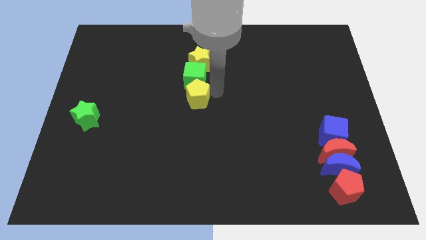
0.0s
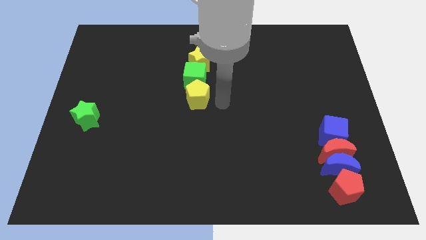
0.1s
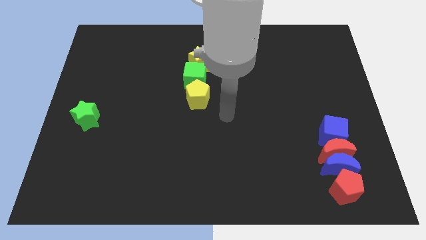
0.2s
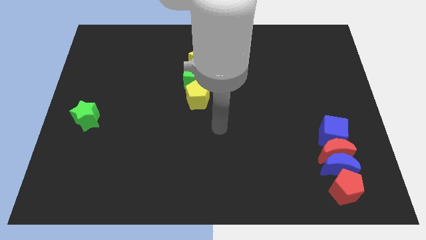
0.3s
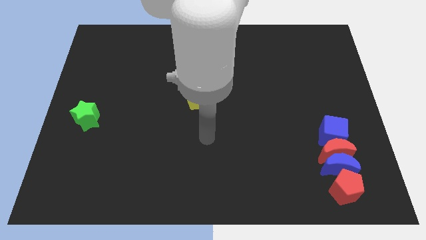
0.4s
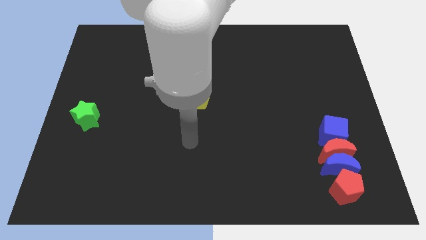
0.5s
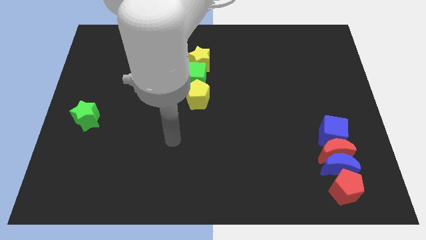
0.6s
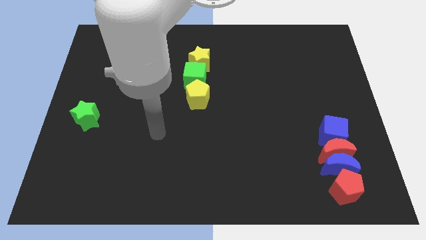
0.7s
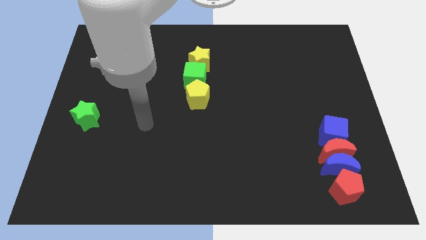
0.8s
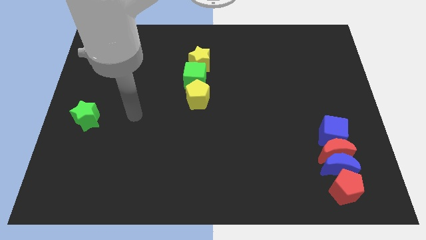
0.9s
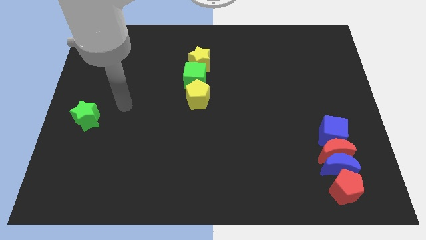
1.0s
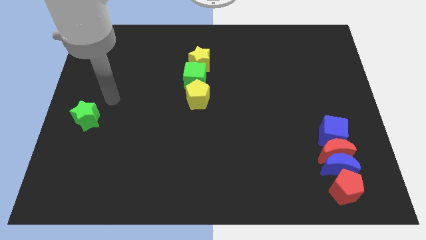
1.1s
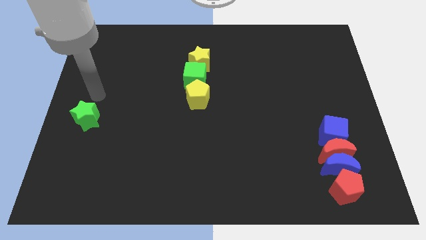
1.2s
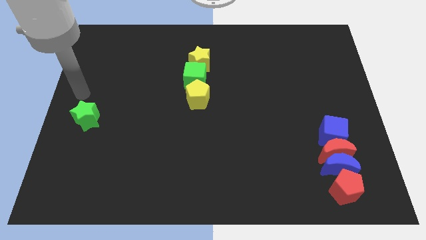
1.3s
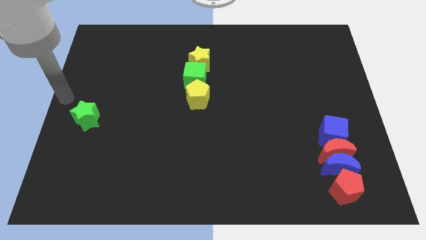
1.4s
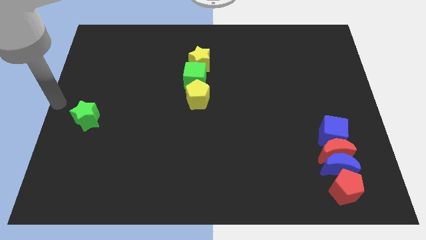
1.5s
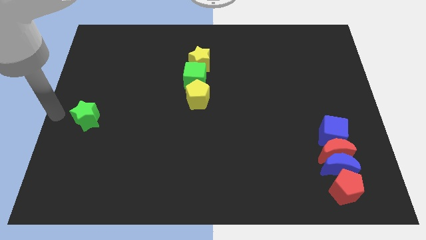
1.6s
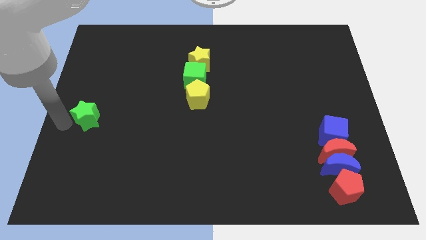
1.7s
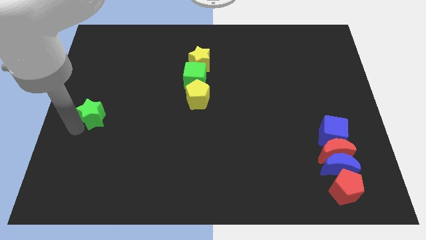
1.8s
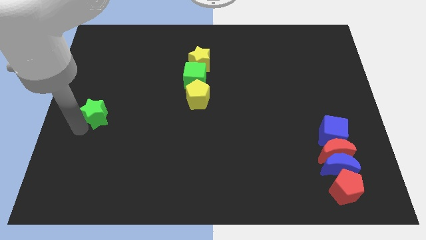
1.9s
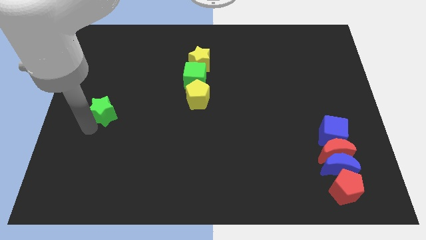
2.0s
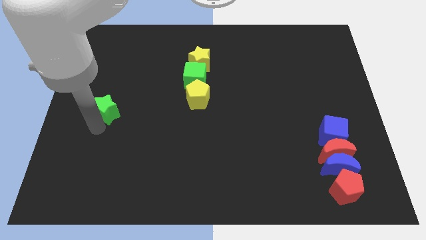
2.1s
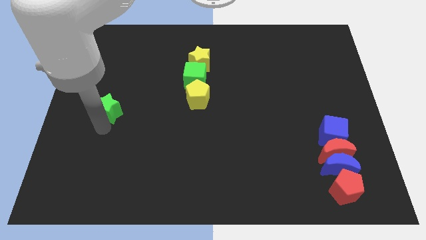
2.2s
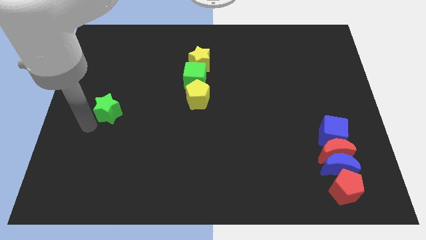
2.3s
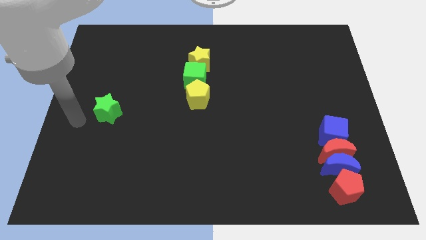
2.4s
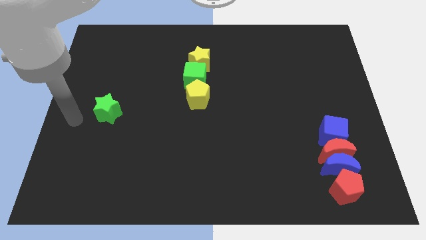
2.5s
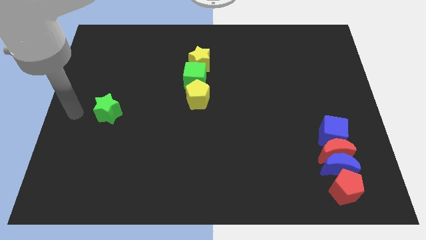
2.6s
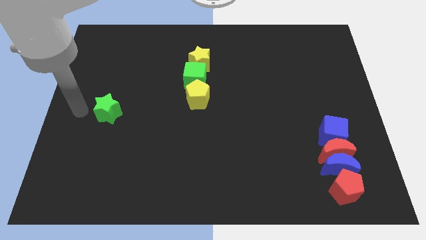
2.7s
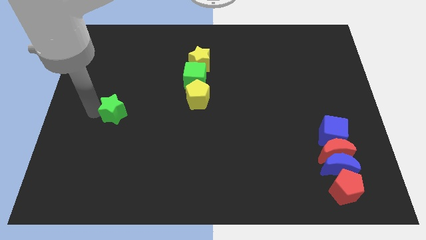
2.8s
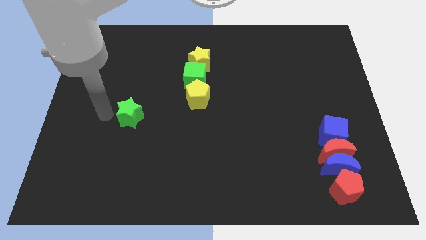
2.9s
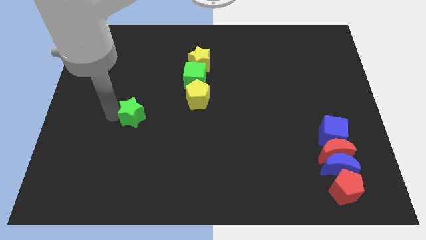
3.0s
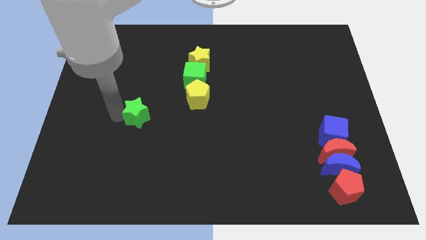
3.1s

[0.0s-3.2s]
move your arm away from yellow pentagon

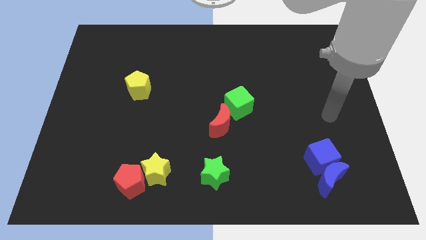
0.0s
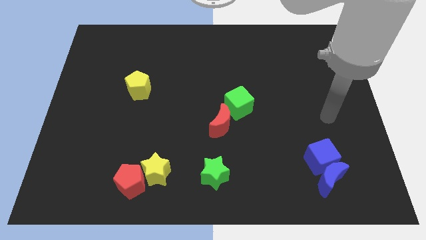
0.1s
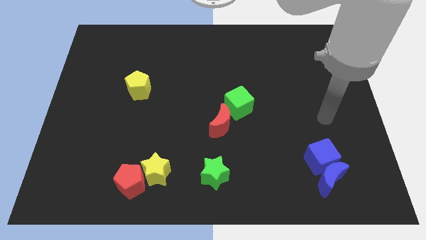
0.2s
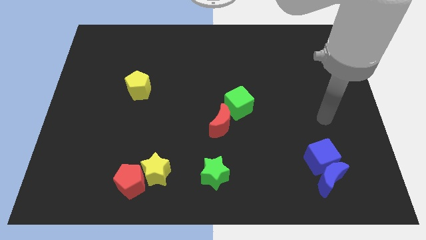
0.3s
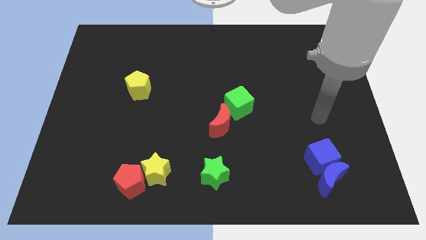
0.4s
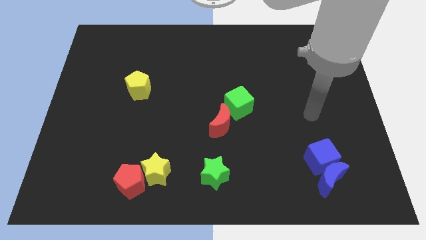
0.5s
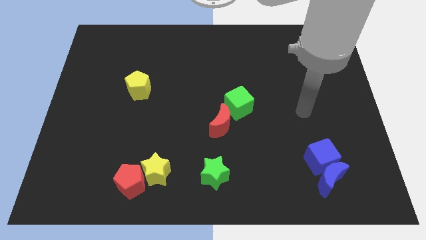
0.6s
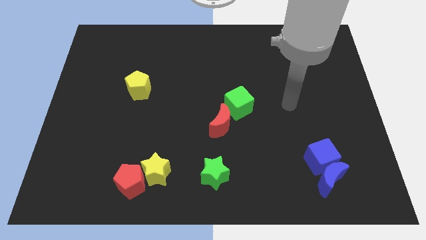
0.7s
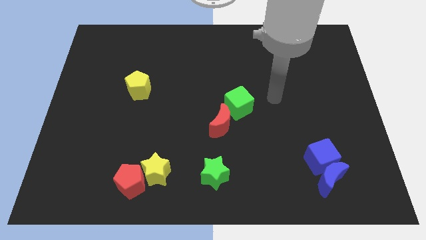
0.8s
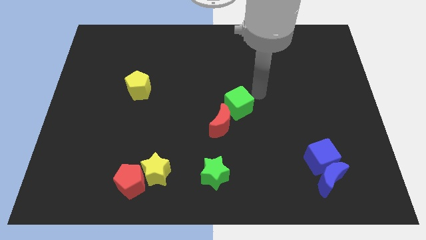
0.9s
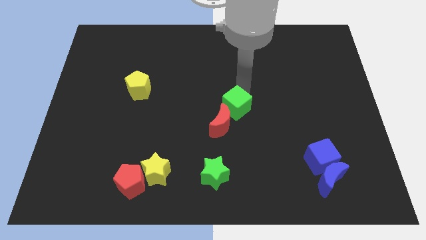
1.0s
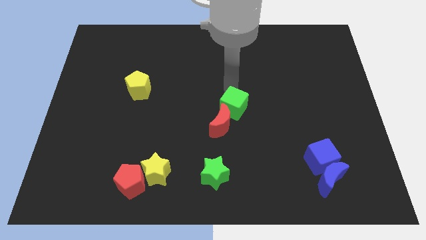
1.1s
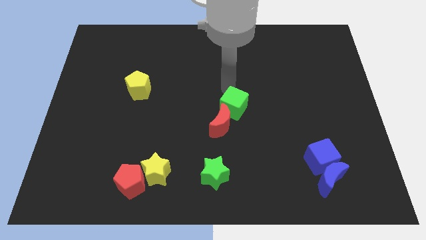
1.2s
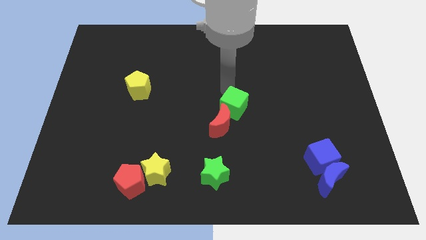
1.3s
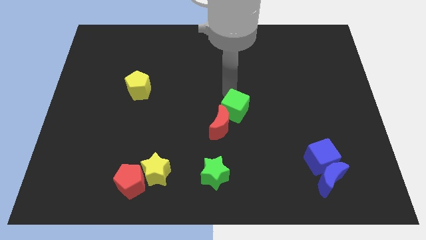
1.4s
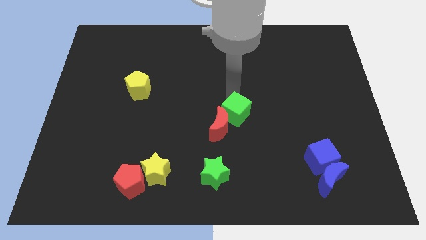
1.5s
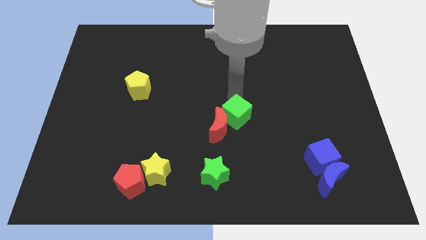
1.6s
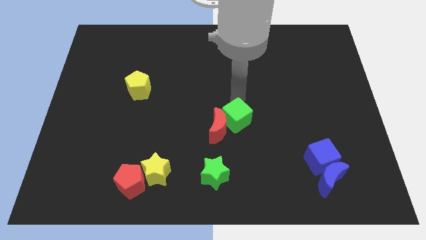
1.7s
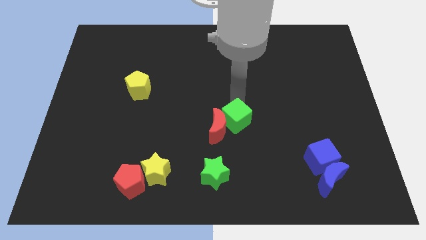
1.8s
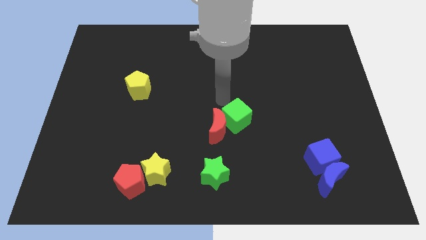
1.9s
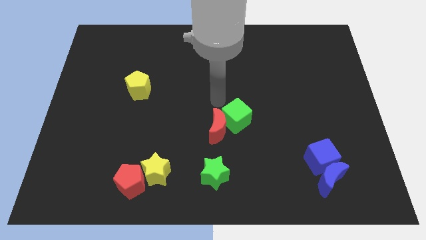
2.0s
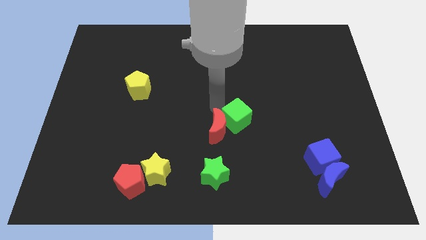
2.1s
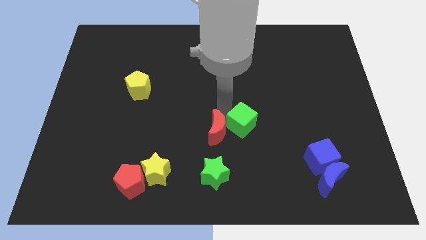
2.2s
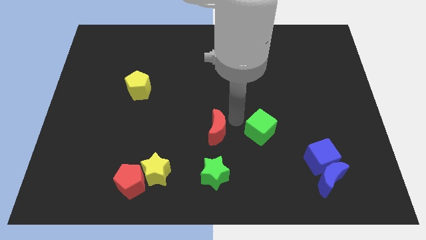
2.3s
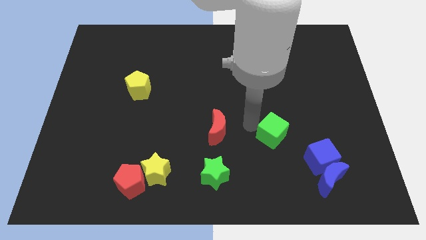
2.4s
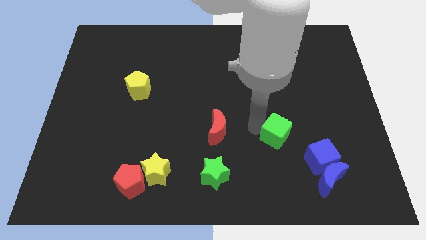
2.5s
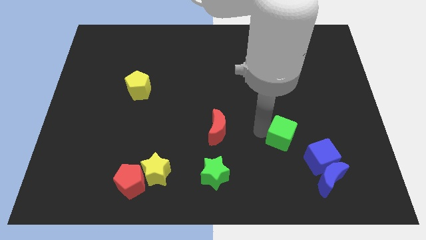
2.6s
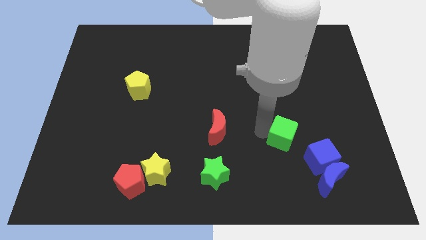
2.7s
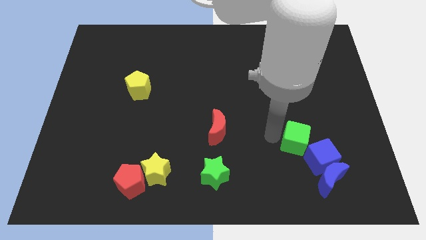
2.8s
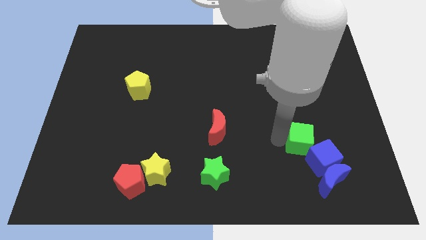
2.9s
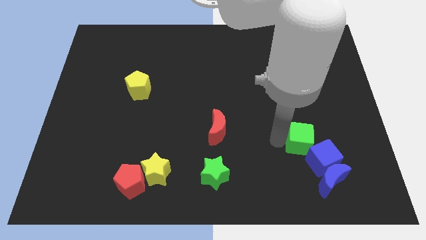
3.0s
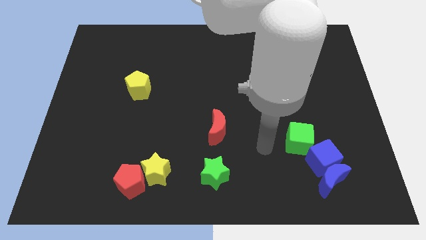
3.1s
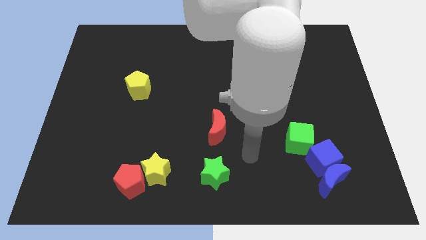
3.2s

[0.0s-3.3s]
push the green cube above the blue cube

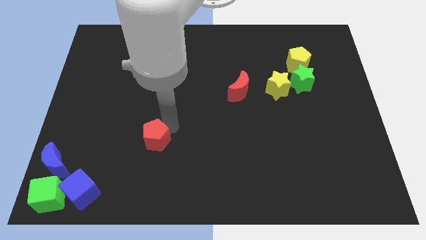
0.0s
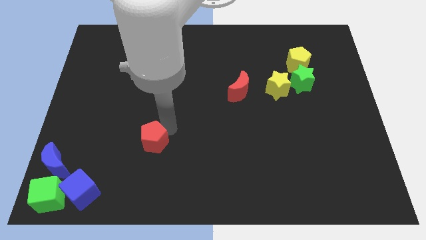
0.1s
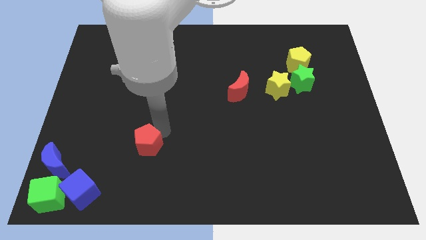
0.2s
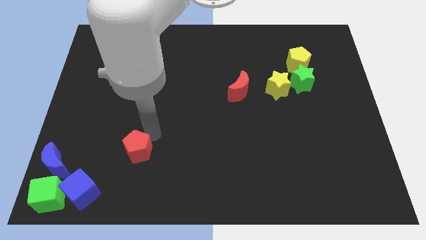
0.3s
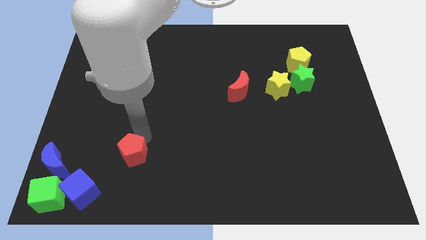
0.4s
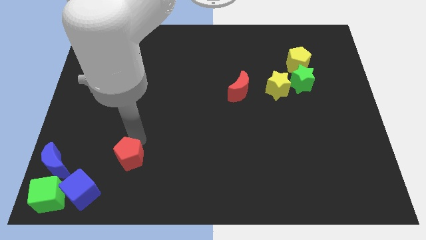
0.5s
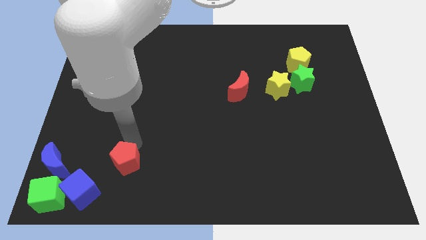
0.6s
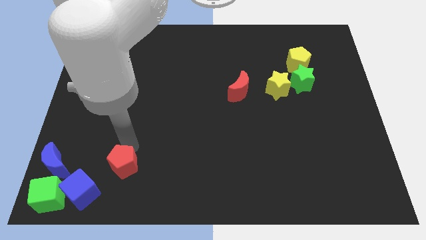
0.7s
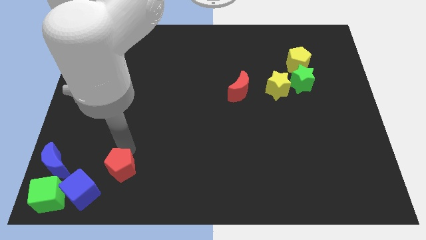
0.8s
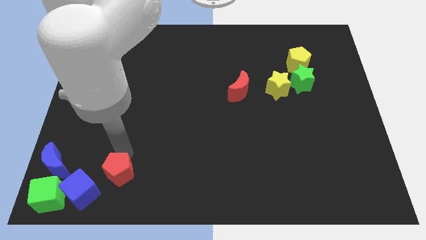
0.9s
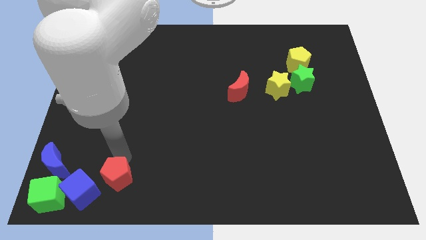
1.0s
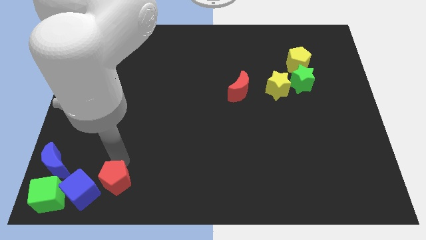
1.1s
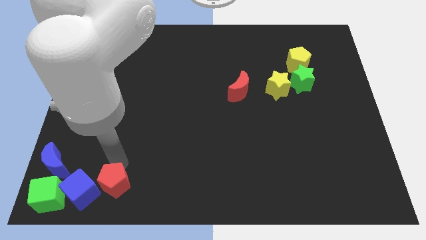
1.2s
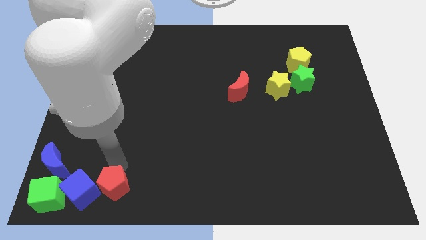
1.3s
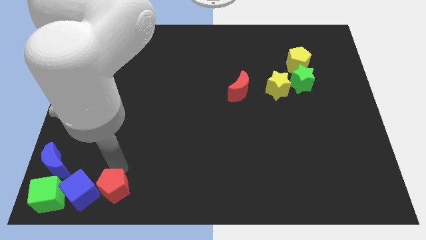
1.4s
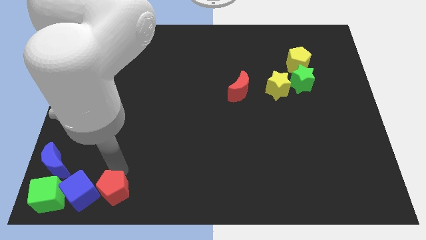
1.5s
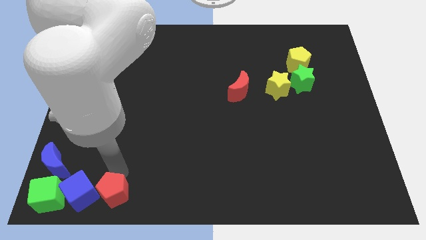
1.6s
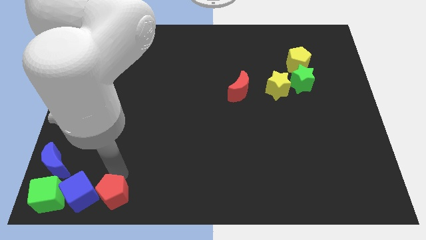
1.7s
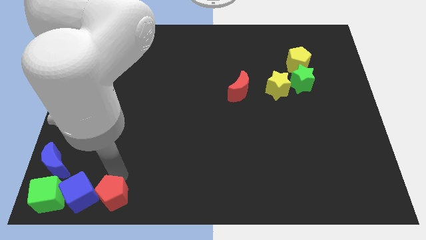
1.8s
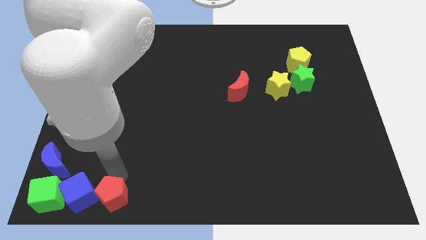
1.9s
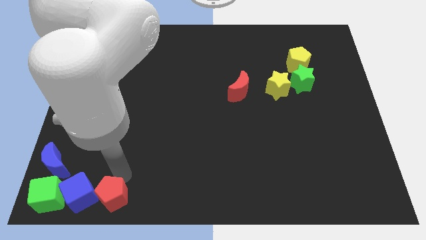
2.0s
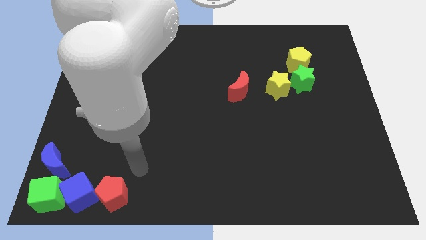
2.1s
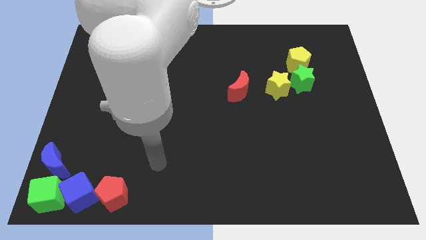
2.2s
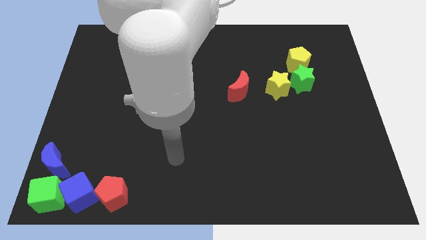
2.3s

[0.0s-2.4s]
place the red pentagon to the right of the blue cube
